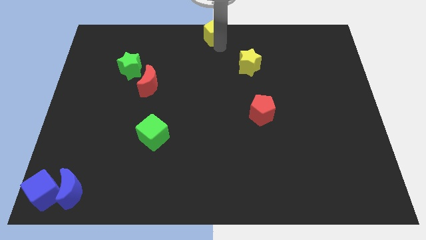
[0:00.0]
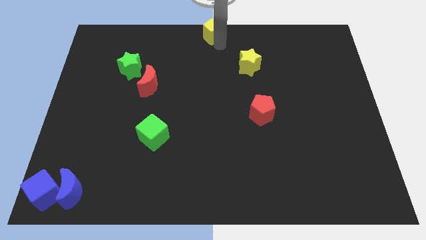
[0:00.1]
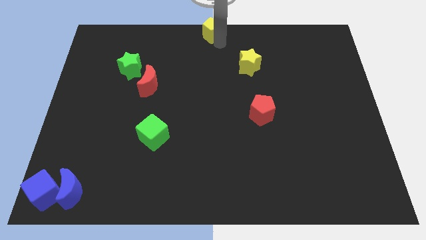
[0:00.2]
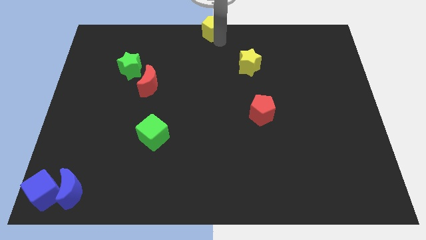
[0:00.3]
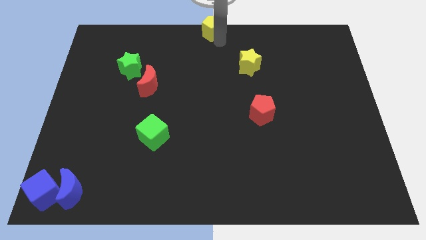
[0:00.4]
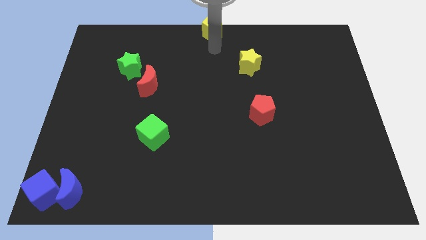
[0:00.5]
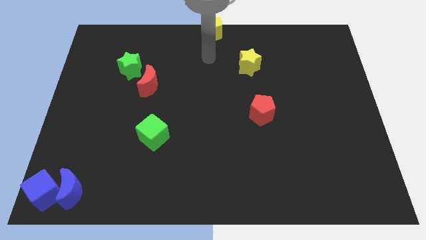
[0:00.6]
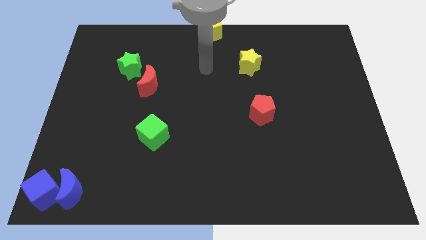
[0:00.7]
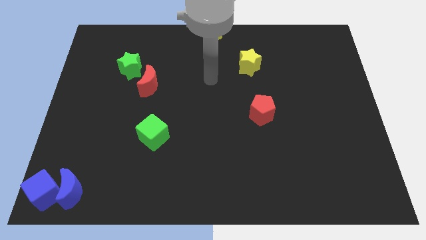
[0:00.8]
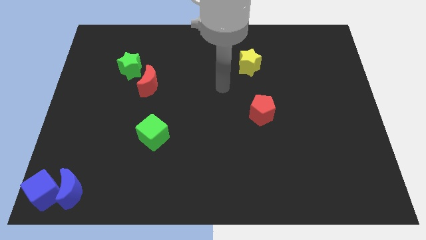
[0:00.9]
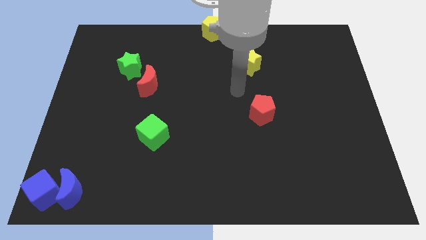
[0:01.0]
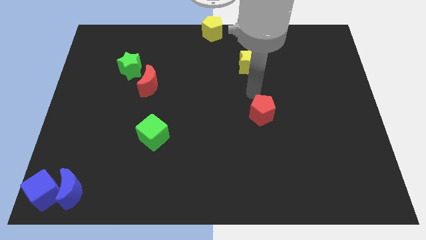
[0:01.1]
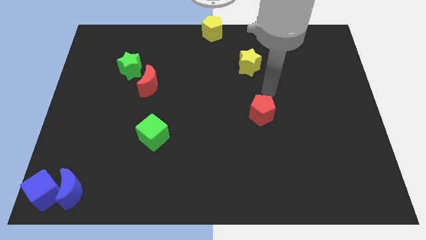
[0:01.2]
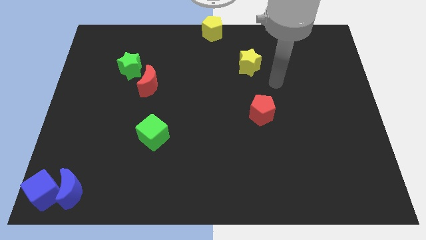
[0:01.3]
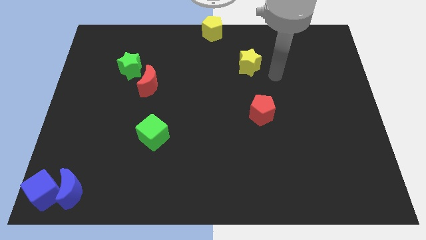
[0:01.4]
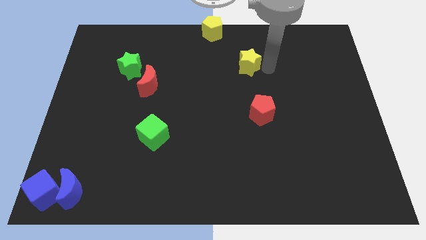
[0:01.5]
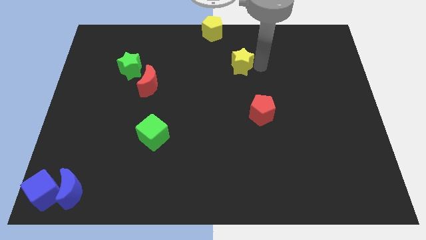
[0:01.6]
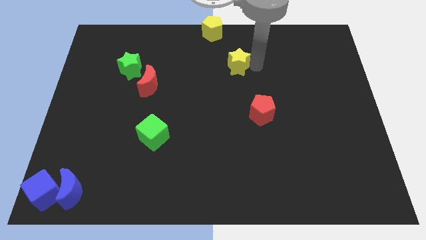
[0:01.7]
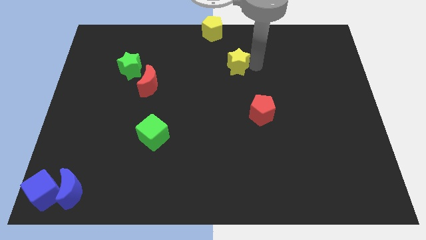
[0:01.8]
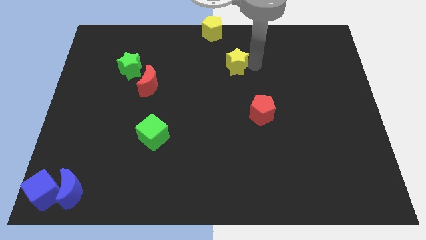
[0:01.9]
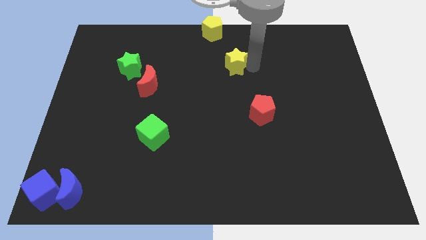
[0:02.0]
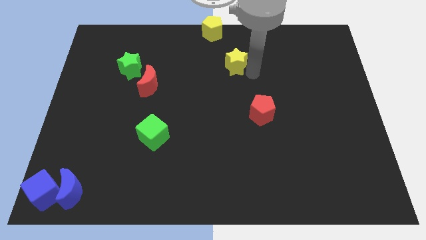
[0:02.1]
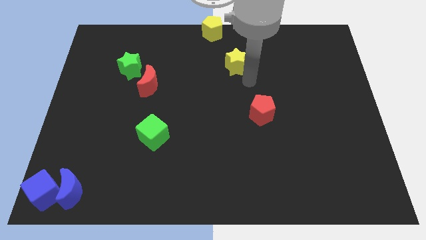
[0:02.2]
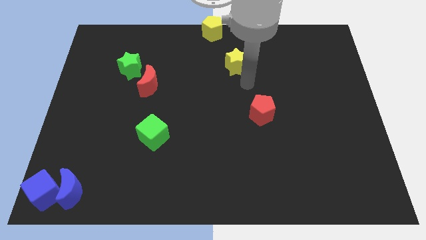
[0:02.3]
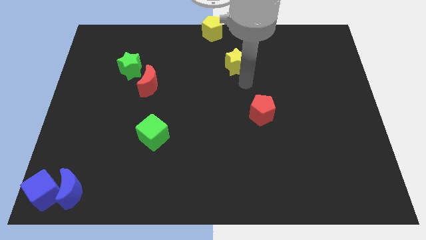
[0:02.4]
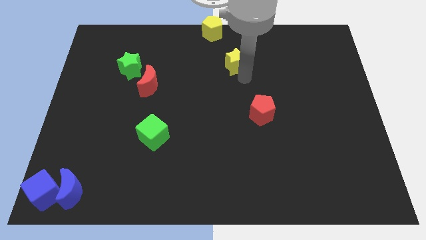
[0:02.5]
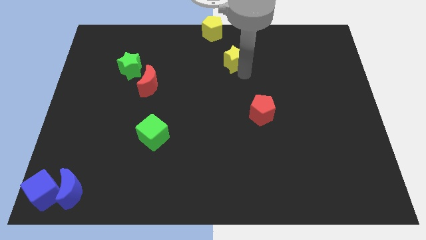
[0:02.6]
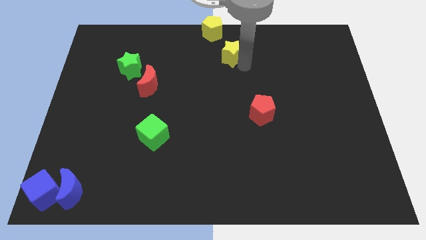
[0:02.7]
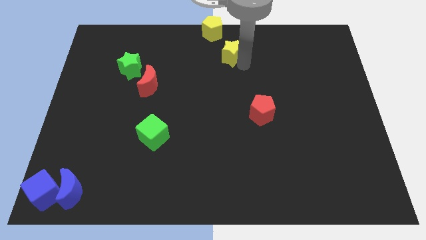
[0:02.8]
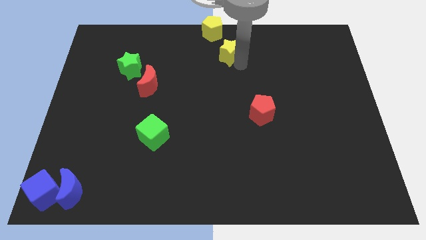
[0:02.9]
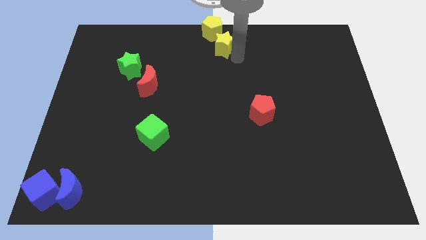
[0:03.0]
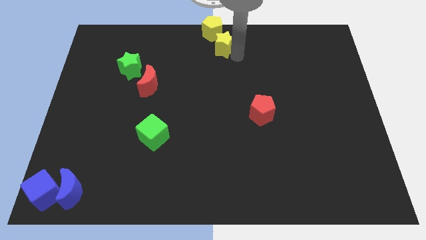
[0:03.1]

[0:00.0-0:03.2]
move yellow star near to the yellow pentagon

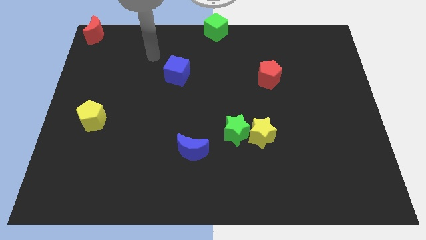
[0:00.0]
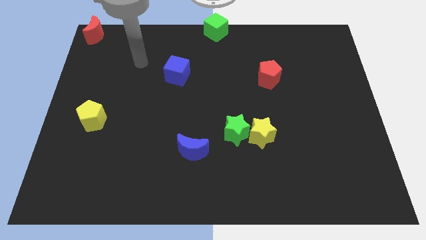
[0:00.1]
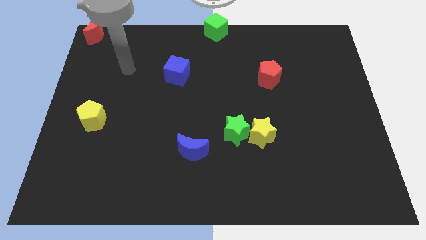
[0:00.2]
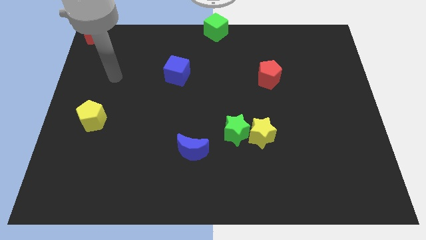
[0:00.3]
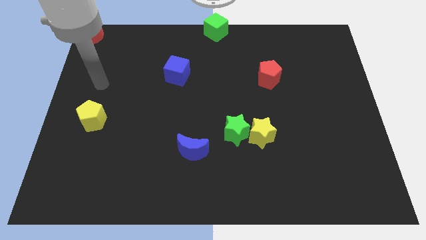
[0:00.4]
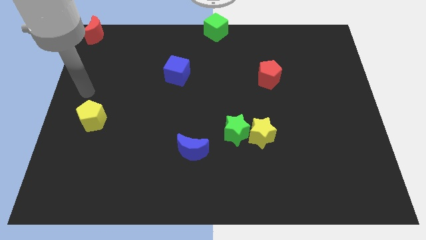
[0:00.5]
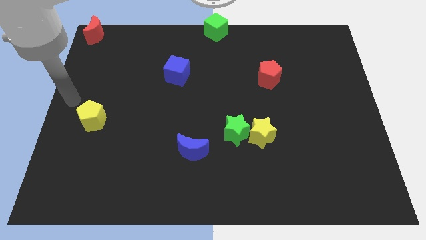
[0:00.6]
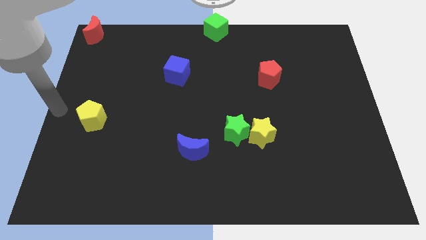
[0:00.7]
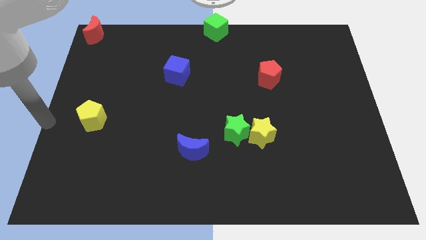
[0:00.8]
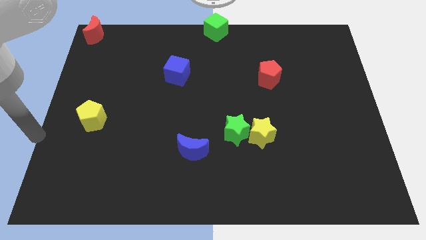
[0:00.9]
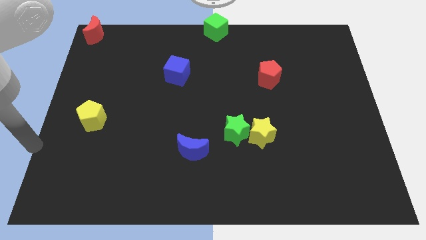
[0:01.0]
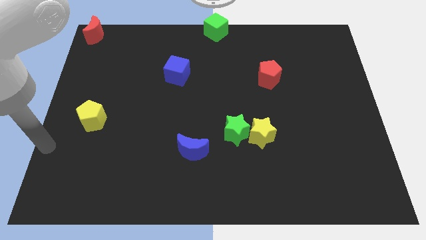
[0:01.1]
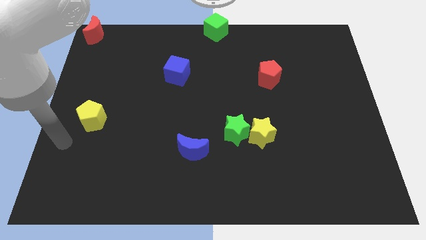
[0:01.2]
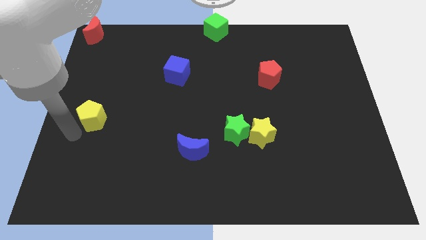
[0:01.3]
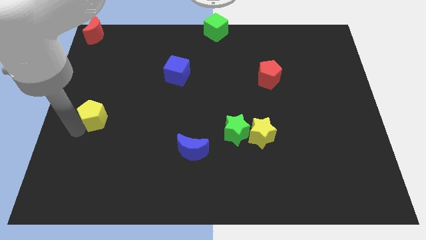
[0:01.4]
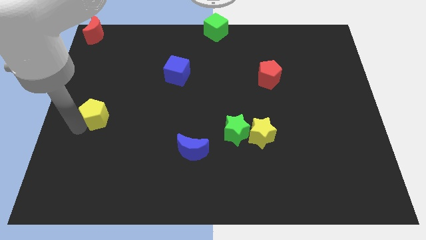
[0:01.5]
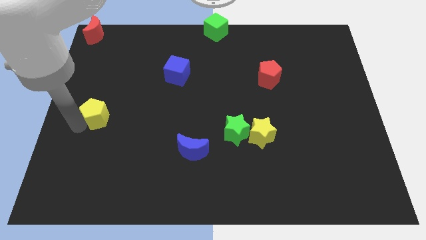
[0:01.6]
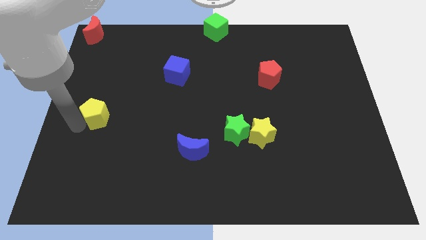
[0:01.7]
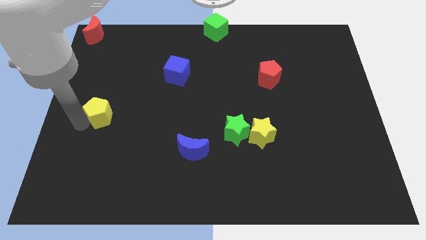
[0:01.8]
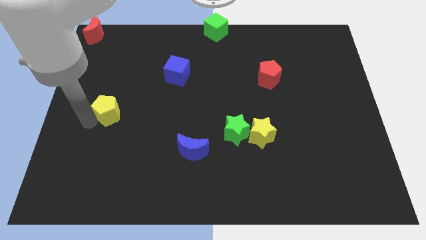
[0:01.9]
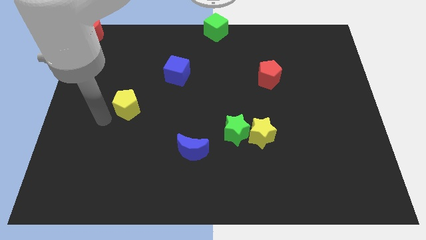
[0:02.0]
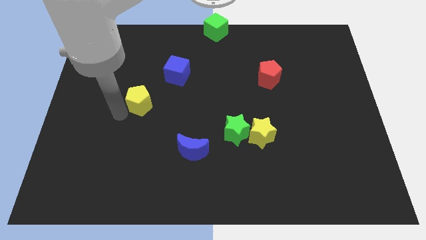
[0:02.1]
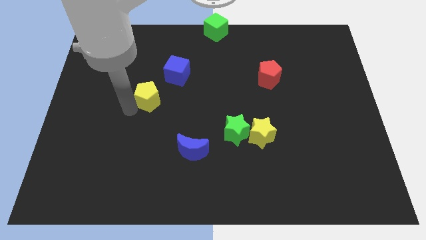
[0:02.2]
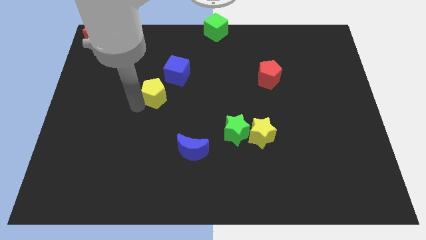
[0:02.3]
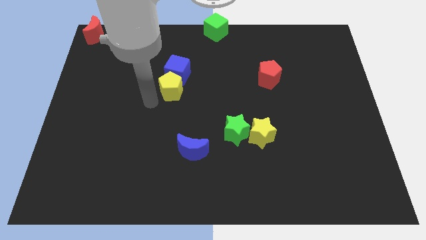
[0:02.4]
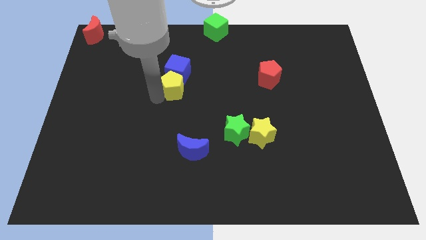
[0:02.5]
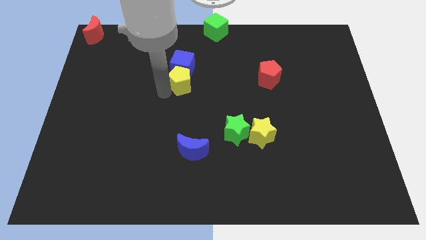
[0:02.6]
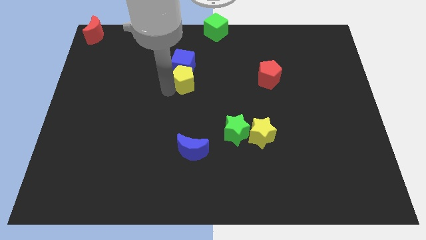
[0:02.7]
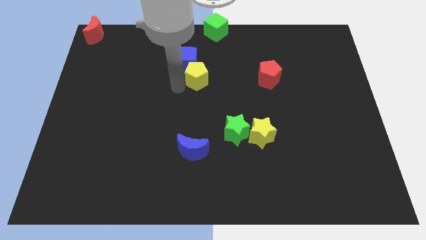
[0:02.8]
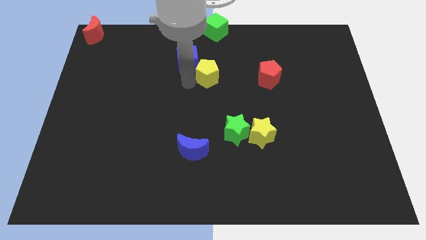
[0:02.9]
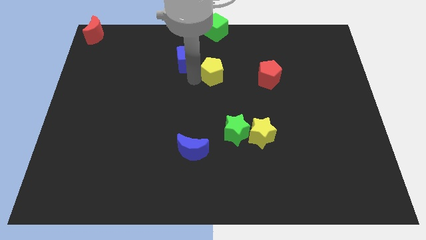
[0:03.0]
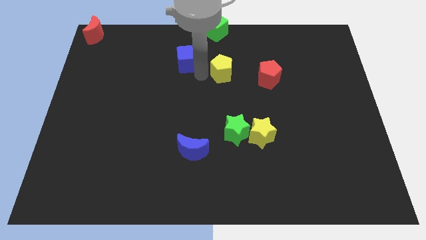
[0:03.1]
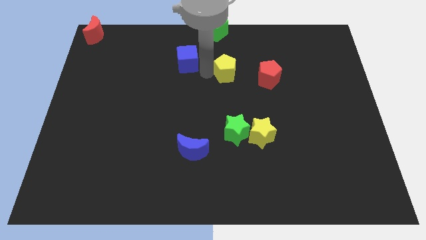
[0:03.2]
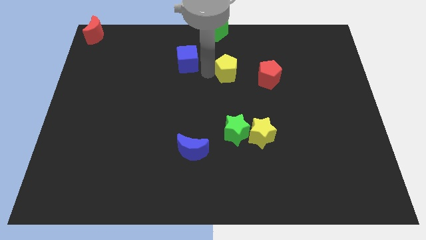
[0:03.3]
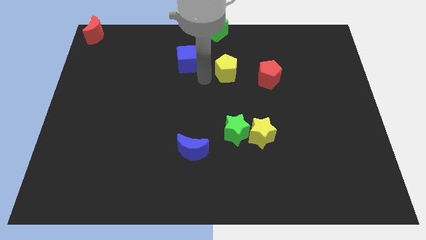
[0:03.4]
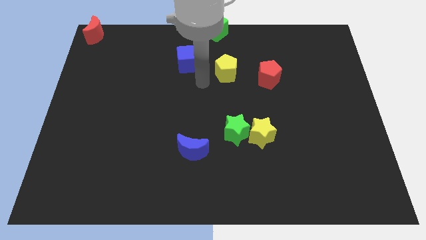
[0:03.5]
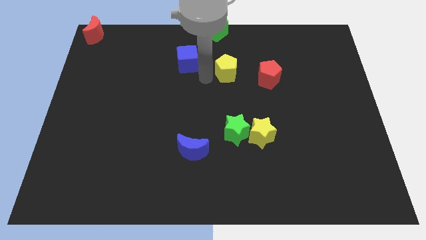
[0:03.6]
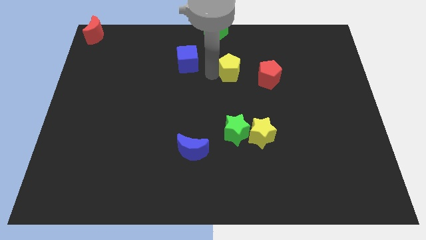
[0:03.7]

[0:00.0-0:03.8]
place the yellow pentagon in between the blue cube and the red pentagon

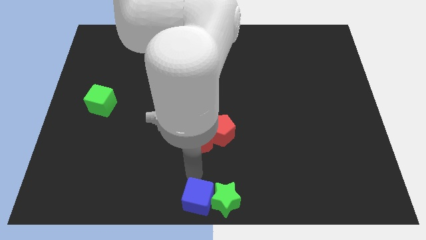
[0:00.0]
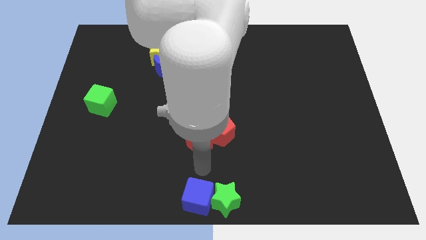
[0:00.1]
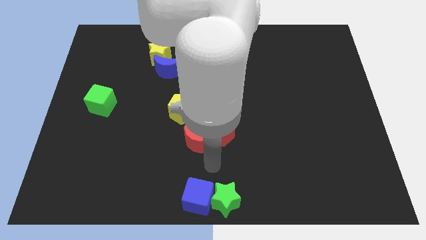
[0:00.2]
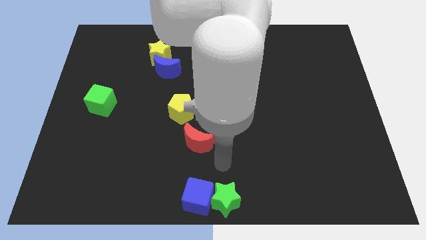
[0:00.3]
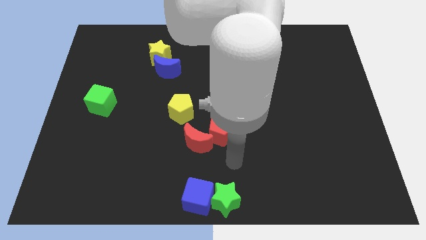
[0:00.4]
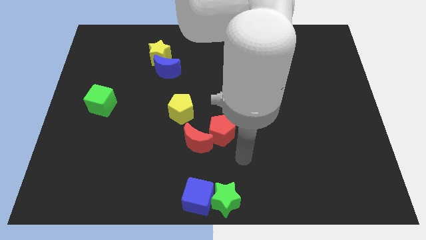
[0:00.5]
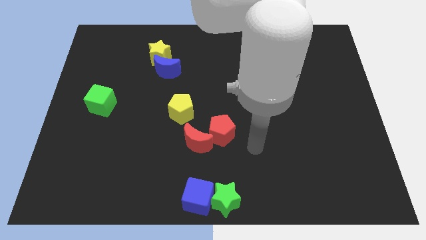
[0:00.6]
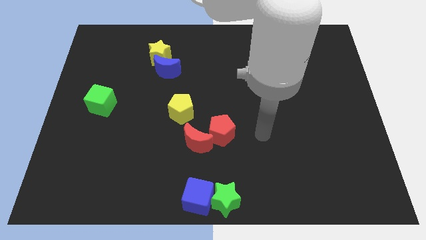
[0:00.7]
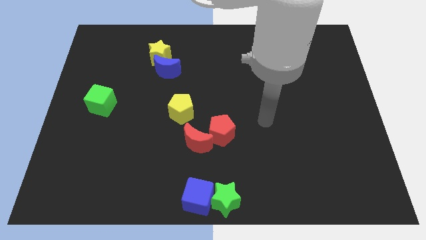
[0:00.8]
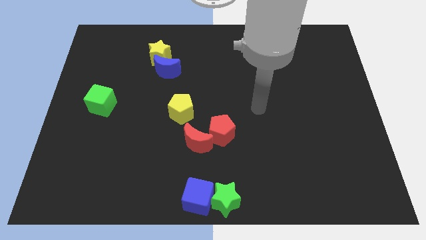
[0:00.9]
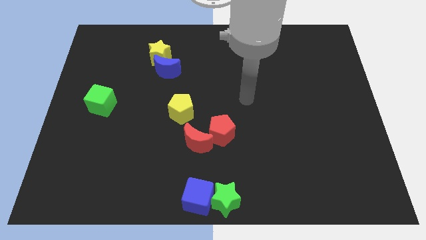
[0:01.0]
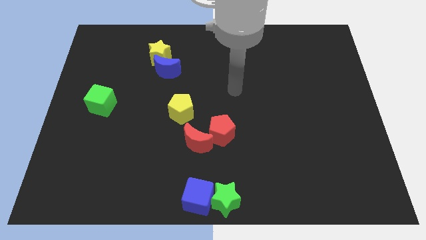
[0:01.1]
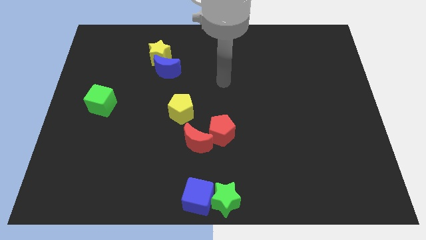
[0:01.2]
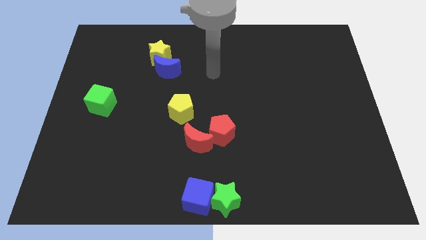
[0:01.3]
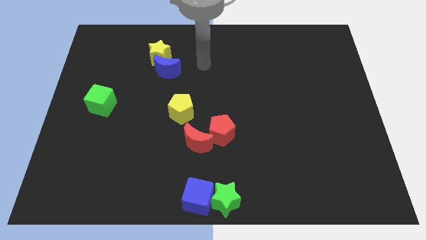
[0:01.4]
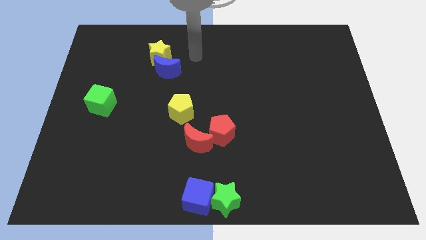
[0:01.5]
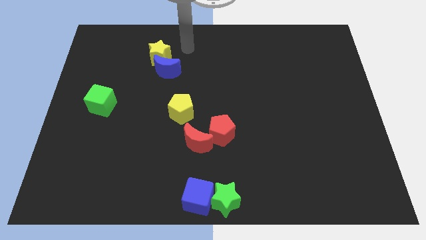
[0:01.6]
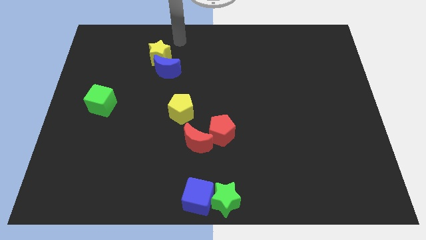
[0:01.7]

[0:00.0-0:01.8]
move your arm away from the blue cube

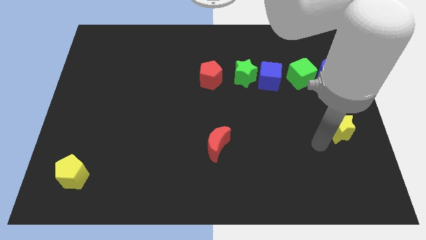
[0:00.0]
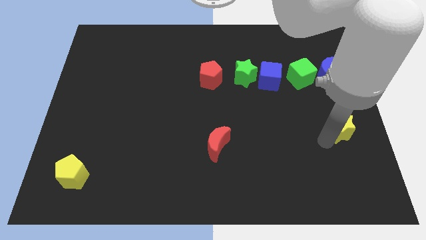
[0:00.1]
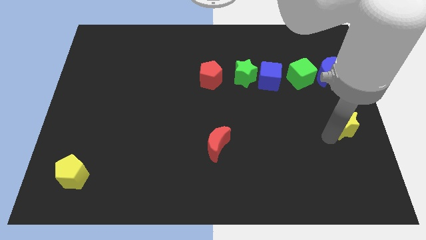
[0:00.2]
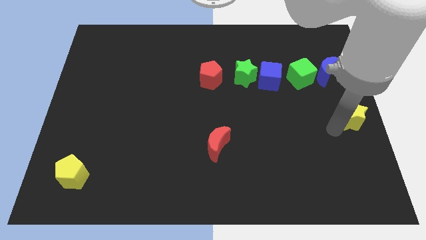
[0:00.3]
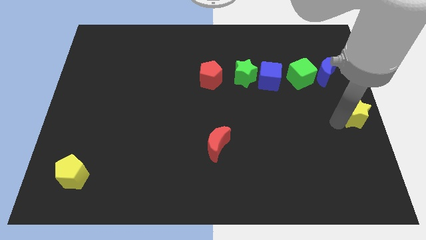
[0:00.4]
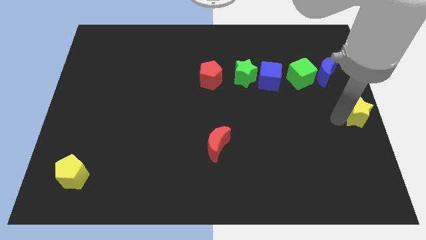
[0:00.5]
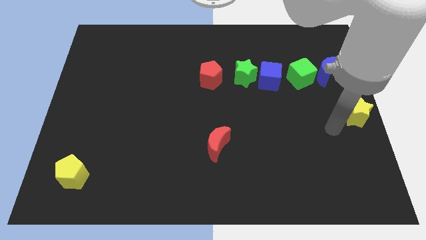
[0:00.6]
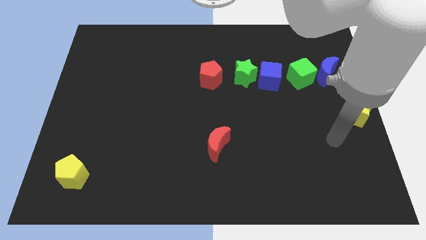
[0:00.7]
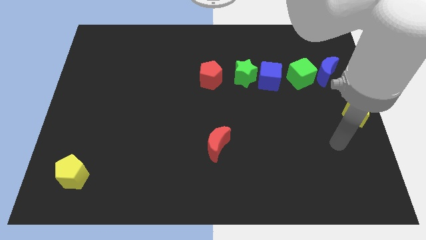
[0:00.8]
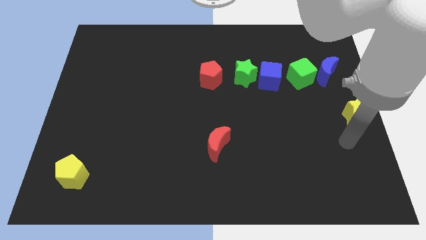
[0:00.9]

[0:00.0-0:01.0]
move the yellow star to the center right of the board
